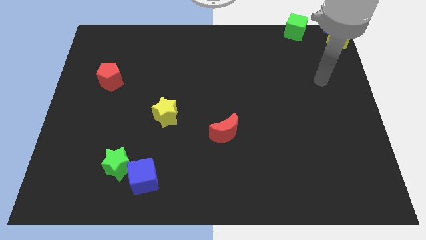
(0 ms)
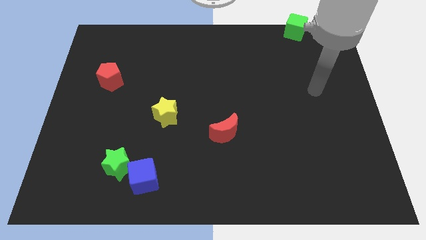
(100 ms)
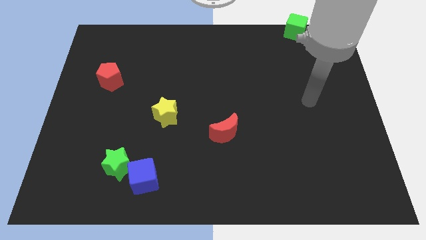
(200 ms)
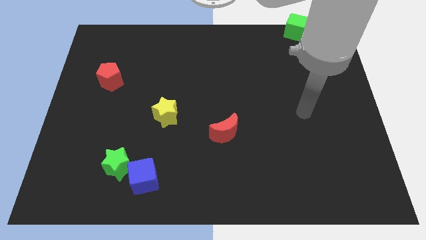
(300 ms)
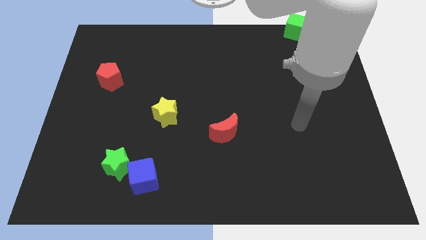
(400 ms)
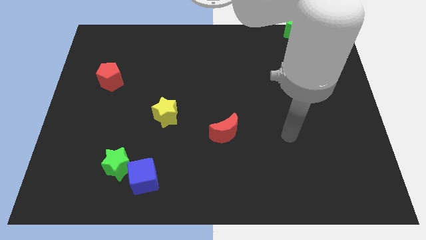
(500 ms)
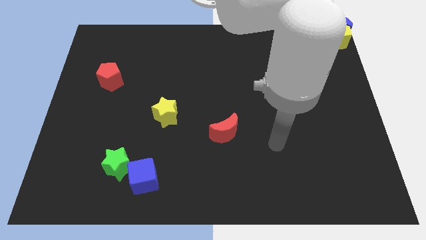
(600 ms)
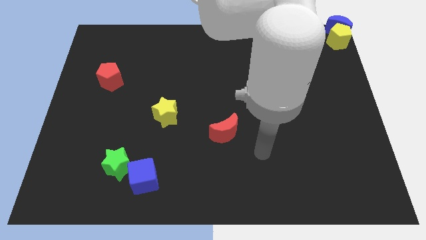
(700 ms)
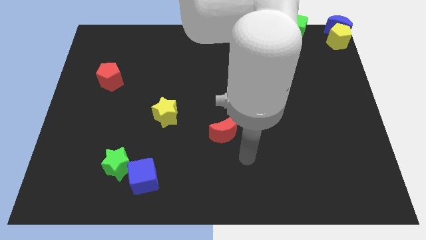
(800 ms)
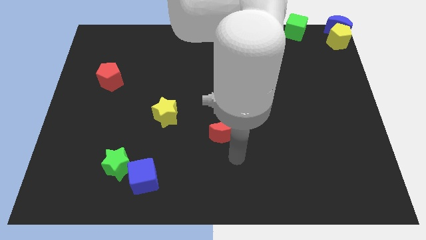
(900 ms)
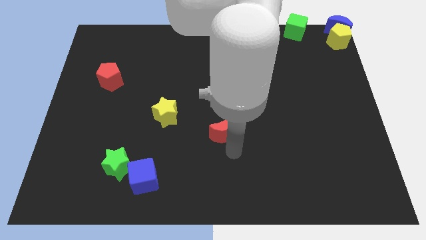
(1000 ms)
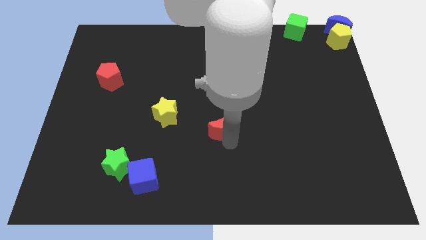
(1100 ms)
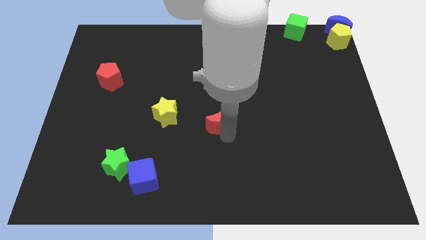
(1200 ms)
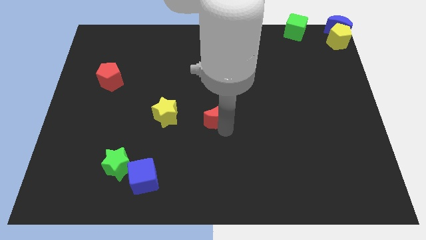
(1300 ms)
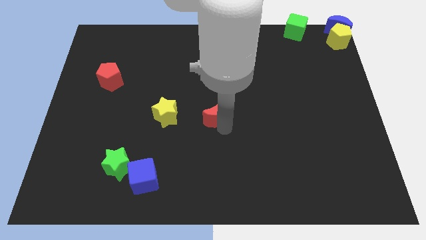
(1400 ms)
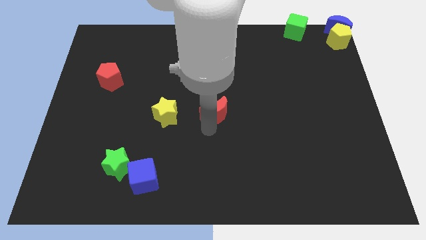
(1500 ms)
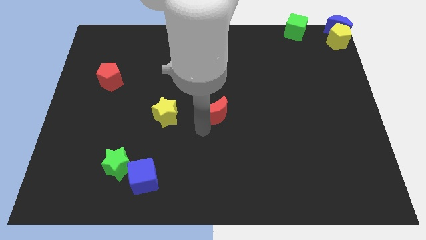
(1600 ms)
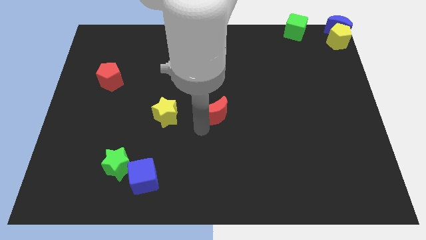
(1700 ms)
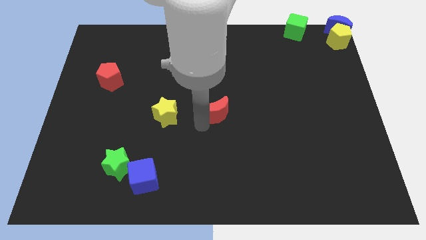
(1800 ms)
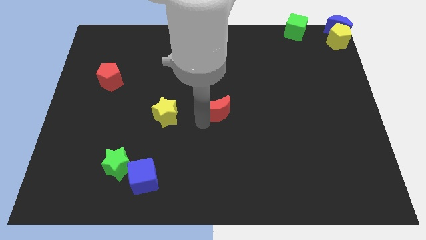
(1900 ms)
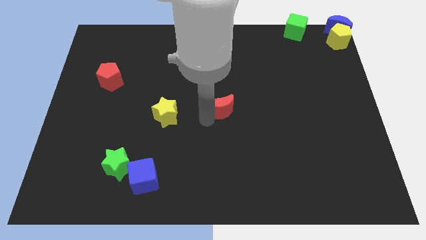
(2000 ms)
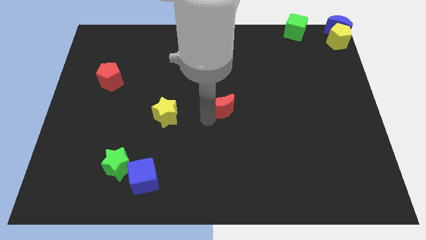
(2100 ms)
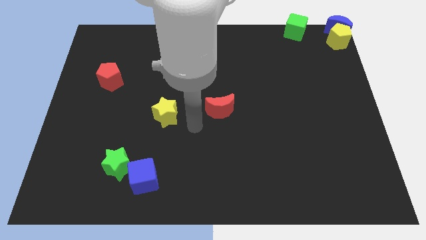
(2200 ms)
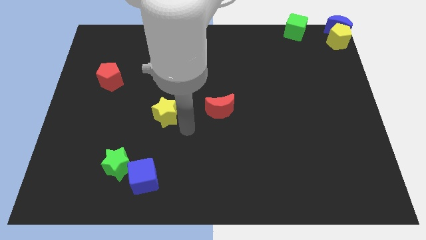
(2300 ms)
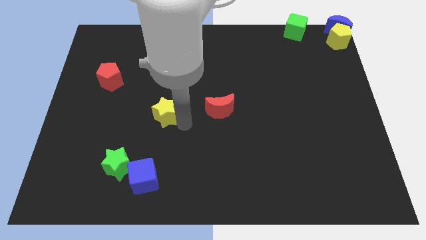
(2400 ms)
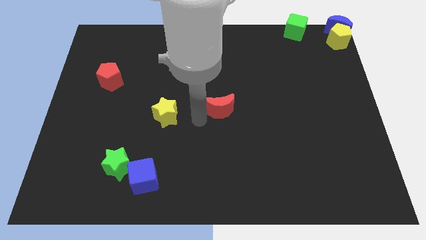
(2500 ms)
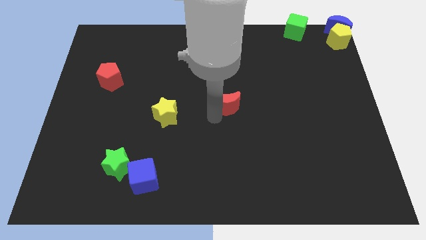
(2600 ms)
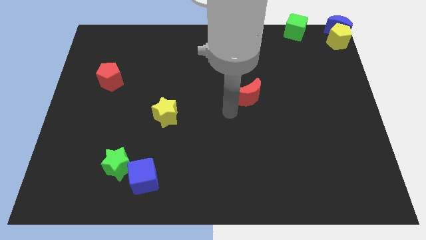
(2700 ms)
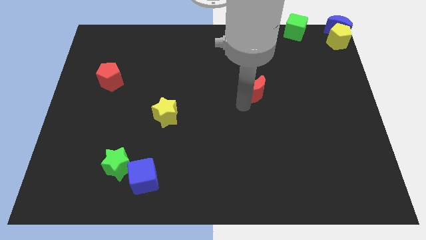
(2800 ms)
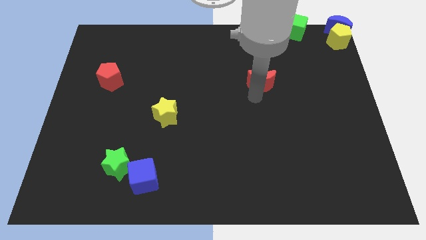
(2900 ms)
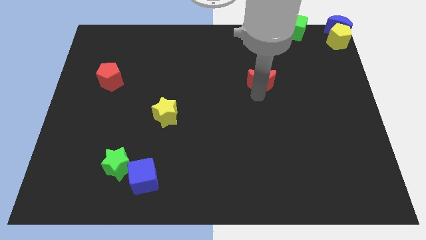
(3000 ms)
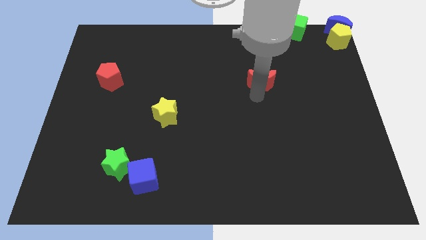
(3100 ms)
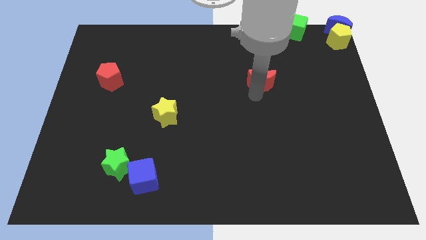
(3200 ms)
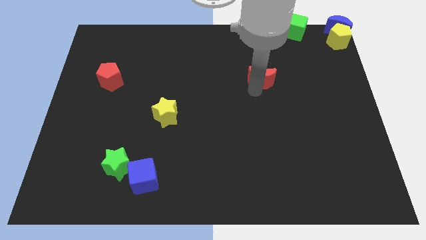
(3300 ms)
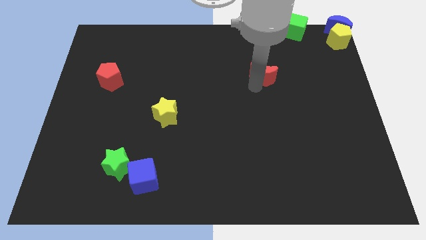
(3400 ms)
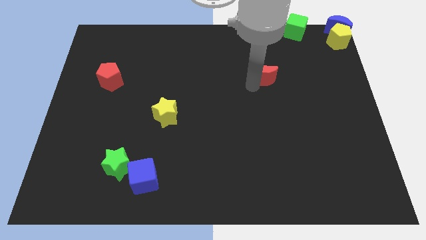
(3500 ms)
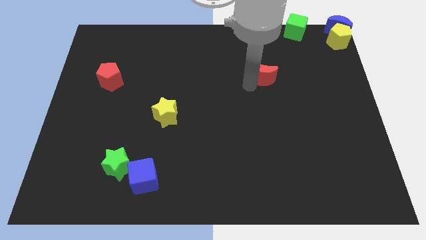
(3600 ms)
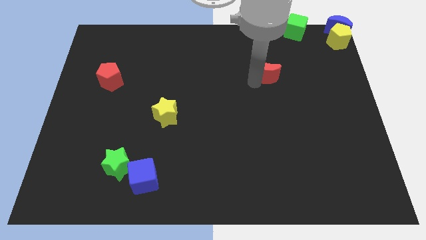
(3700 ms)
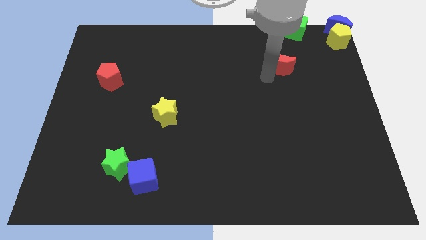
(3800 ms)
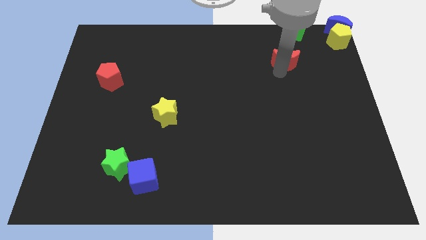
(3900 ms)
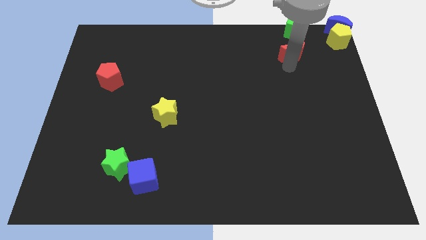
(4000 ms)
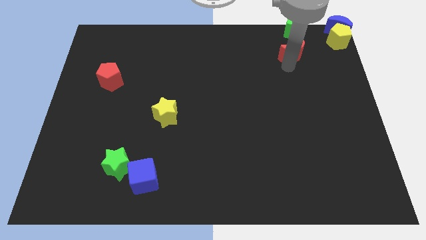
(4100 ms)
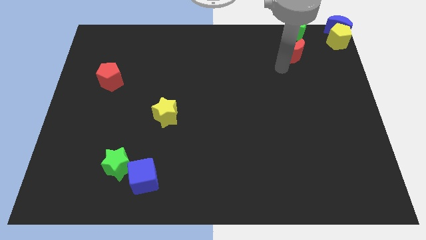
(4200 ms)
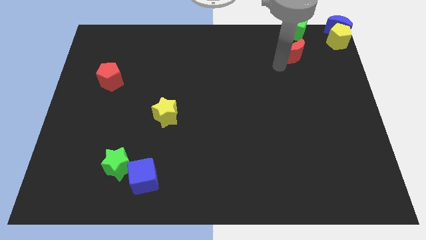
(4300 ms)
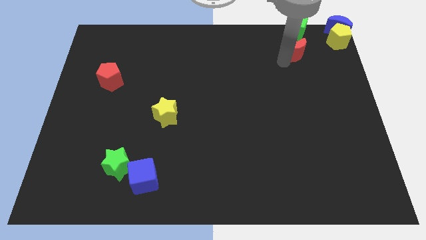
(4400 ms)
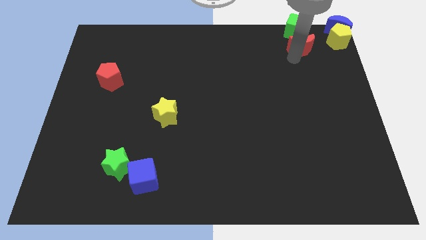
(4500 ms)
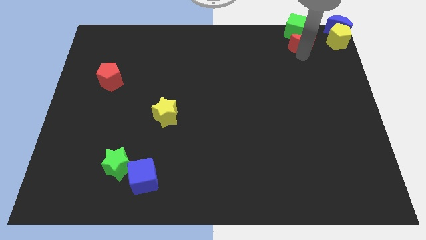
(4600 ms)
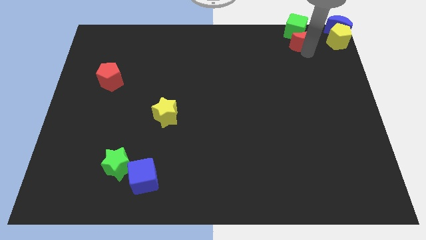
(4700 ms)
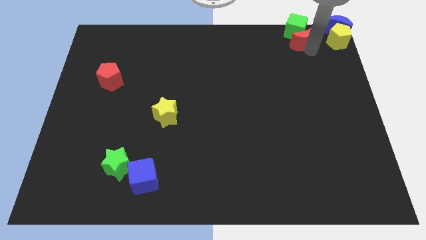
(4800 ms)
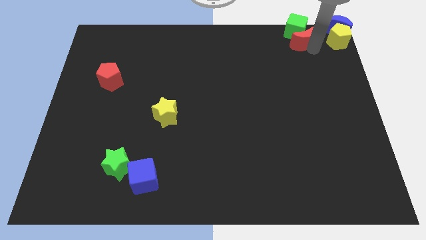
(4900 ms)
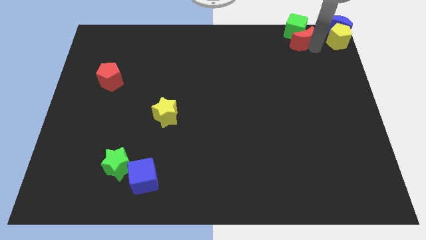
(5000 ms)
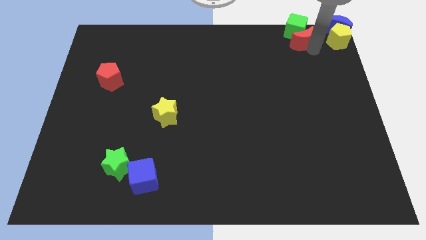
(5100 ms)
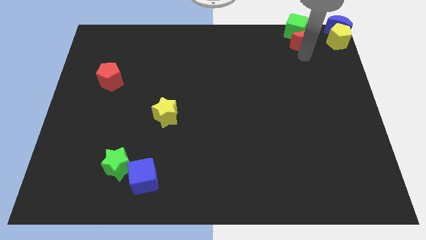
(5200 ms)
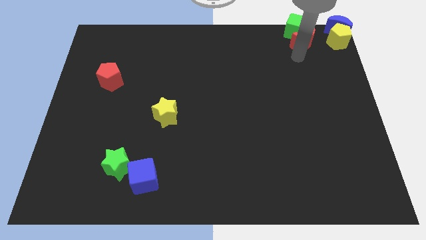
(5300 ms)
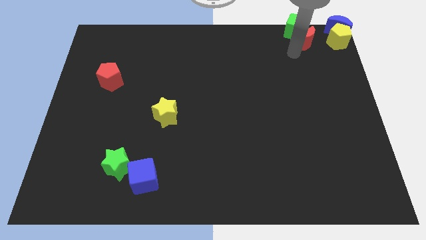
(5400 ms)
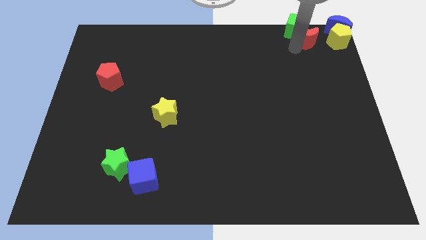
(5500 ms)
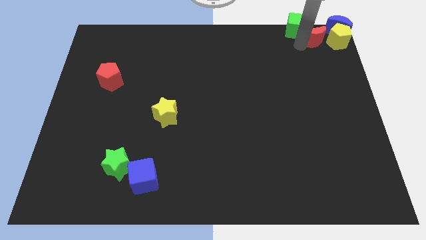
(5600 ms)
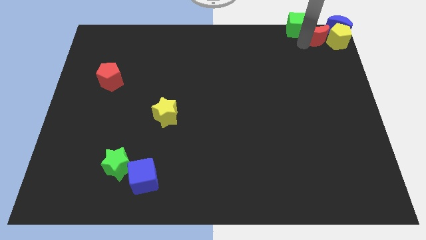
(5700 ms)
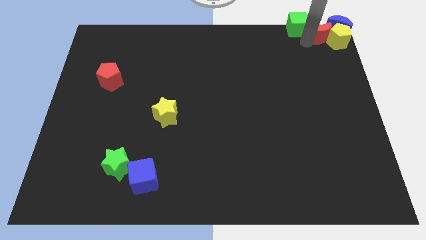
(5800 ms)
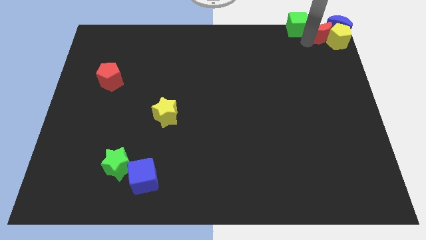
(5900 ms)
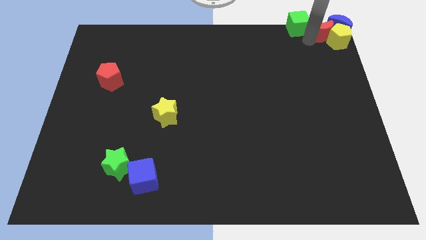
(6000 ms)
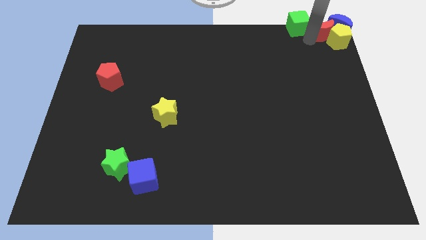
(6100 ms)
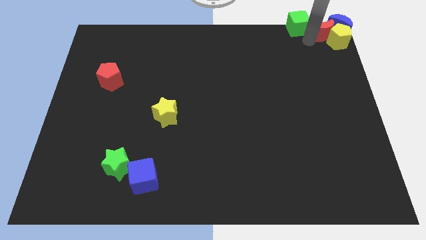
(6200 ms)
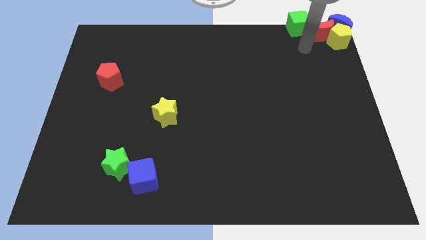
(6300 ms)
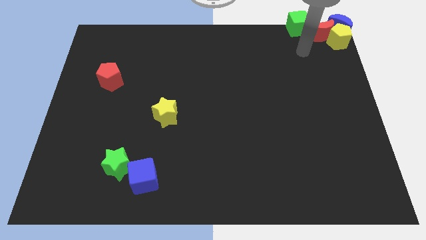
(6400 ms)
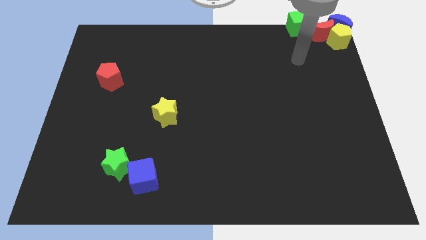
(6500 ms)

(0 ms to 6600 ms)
move the red crescent in between the blue crescent and yellow pentagon

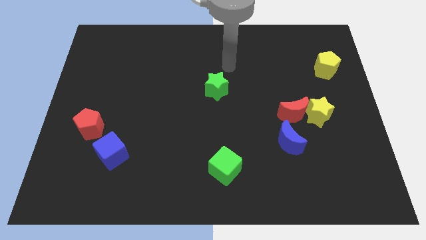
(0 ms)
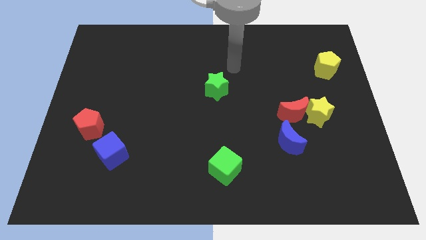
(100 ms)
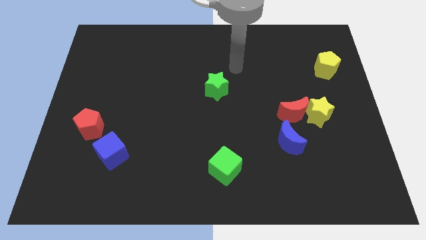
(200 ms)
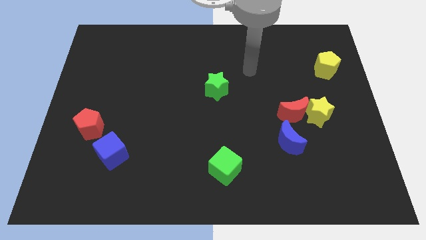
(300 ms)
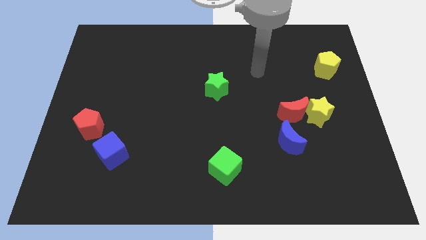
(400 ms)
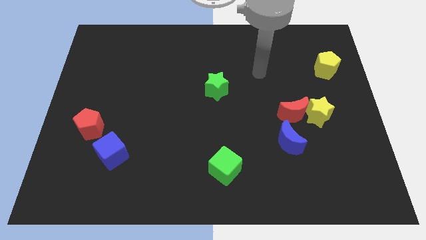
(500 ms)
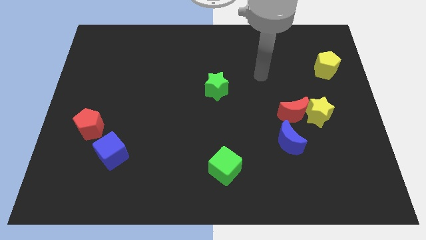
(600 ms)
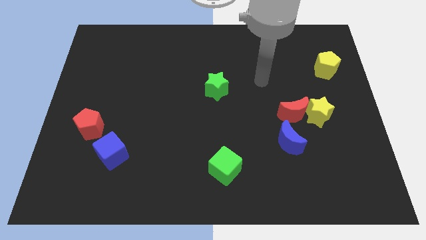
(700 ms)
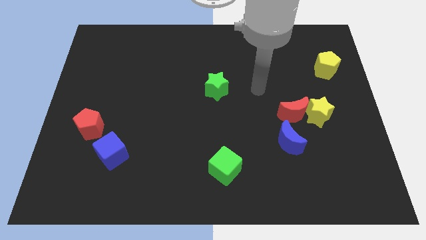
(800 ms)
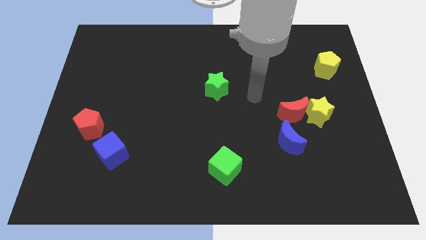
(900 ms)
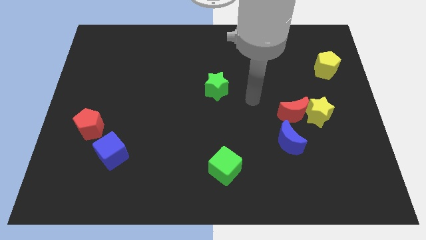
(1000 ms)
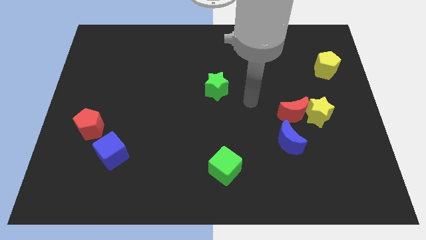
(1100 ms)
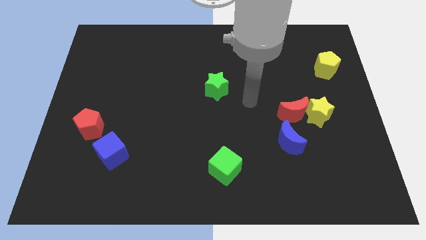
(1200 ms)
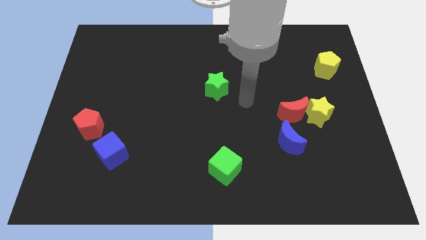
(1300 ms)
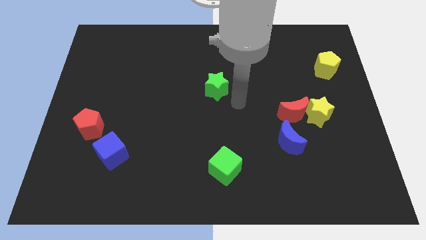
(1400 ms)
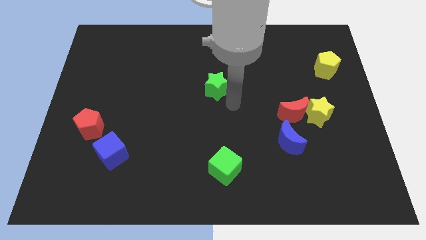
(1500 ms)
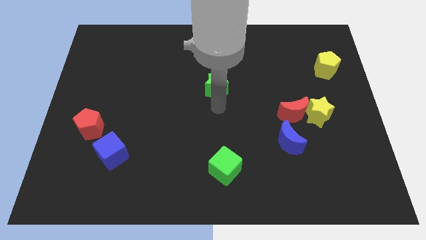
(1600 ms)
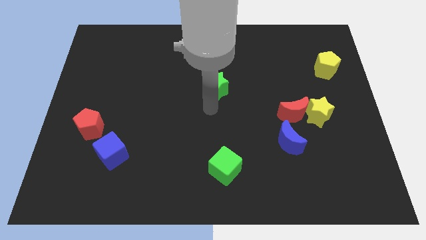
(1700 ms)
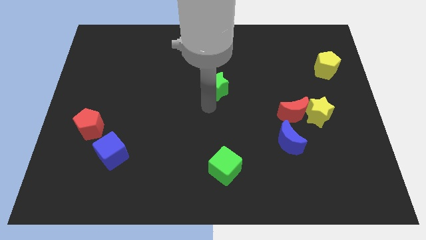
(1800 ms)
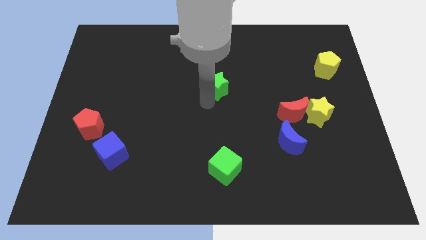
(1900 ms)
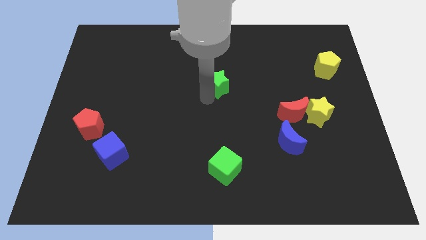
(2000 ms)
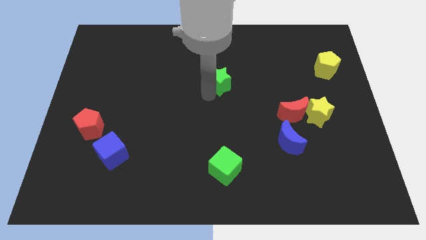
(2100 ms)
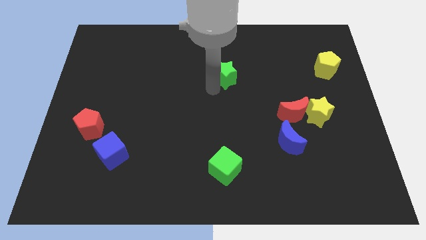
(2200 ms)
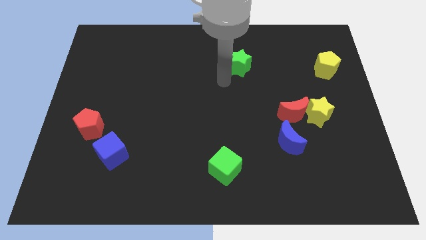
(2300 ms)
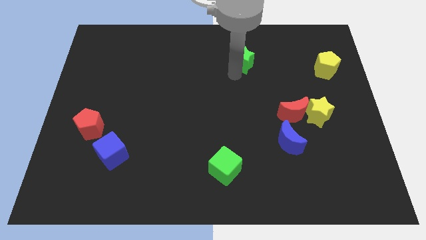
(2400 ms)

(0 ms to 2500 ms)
push the green star slightly up
